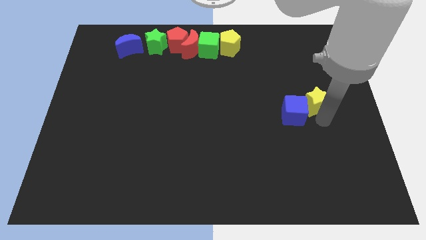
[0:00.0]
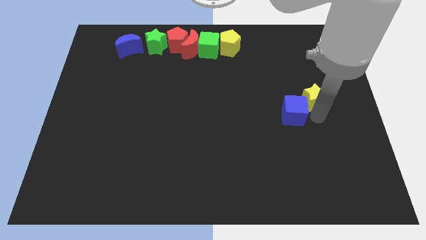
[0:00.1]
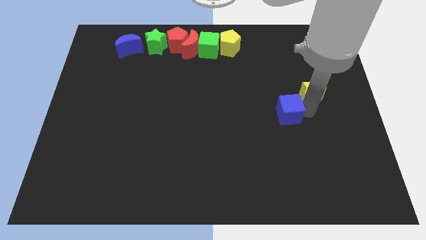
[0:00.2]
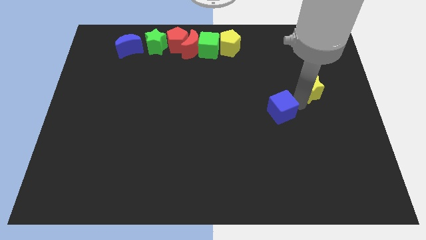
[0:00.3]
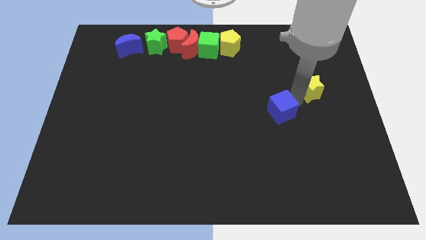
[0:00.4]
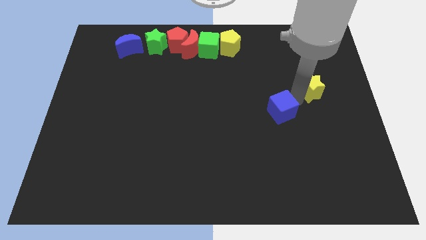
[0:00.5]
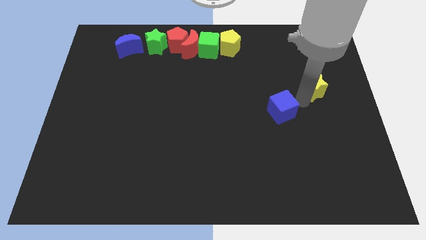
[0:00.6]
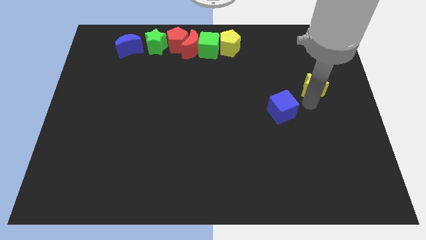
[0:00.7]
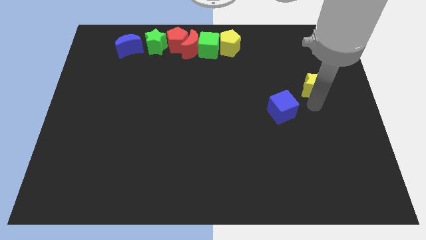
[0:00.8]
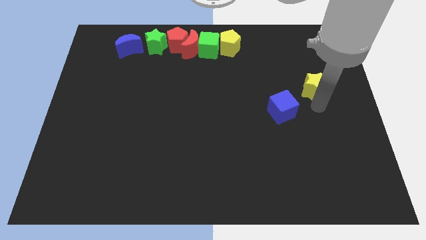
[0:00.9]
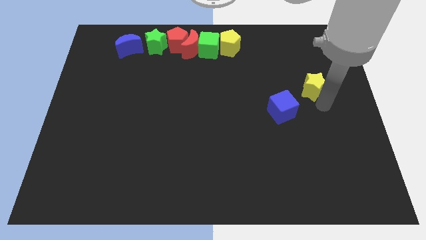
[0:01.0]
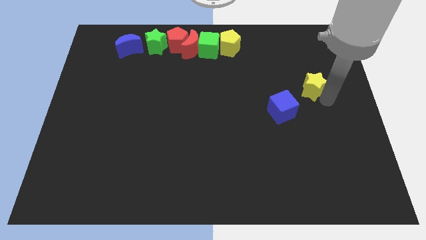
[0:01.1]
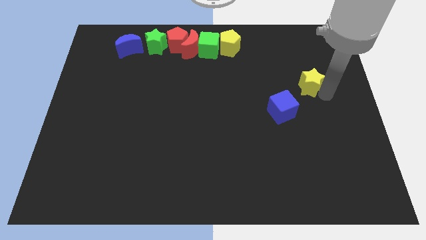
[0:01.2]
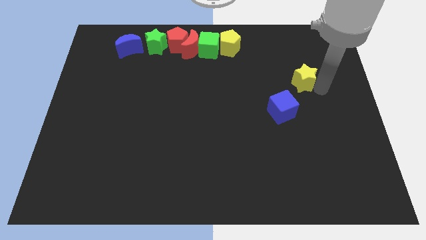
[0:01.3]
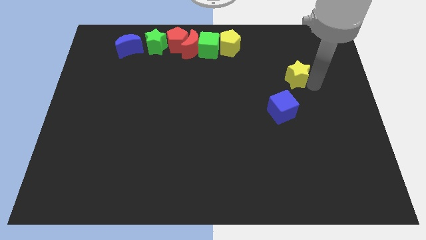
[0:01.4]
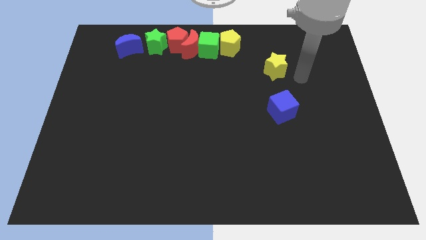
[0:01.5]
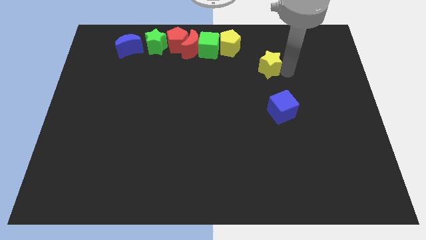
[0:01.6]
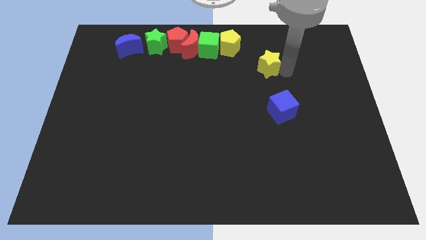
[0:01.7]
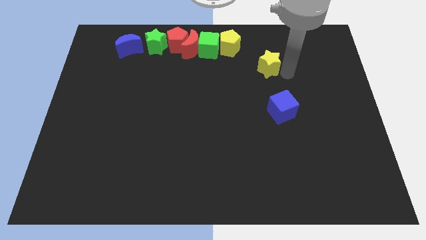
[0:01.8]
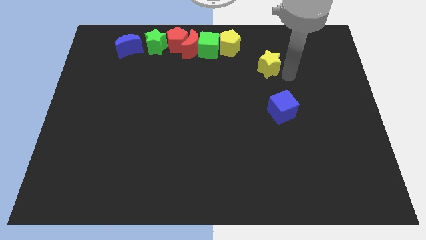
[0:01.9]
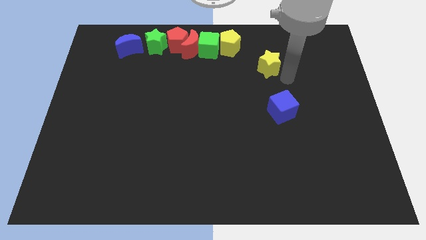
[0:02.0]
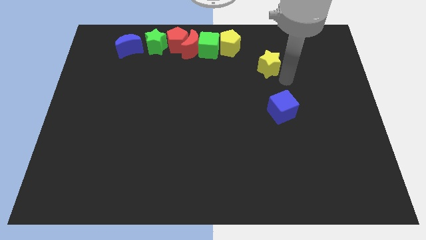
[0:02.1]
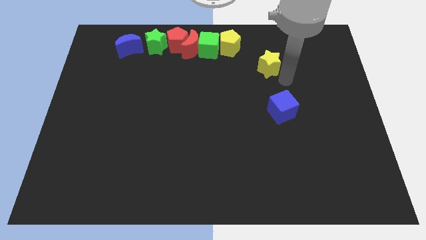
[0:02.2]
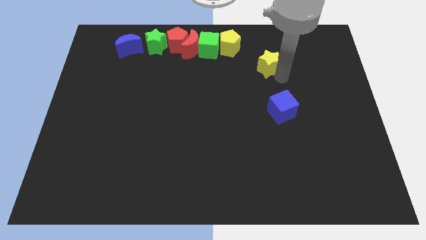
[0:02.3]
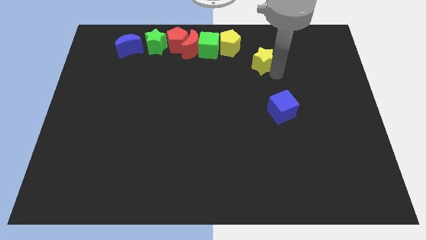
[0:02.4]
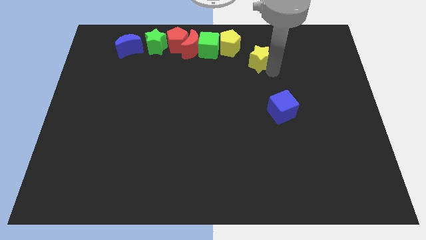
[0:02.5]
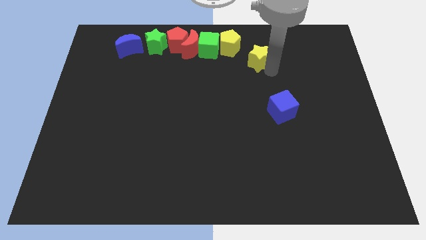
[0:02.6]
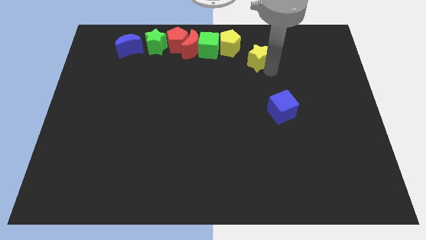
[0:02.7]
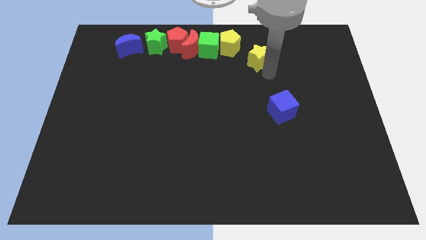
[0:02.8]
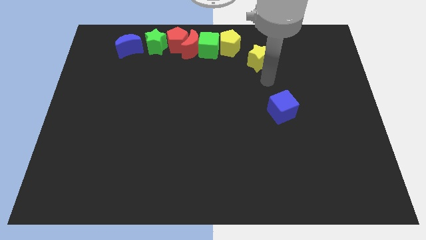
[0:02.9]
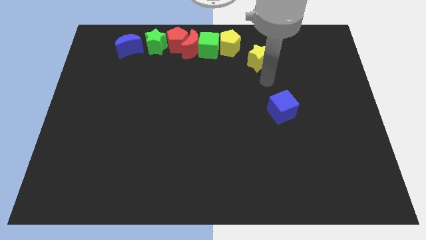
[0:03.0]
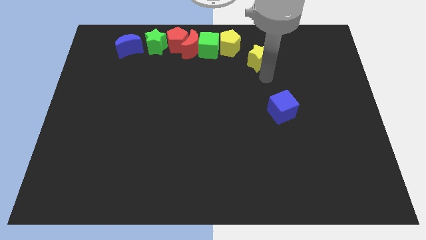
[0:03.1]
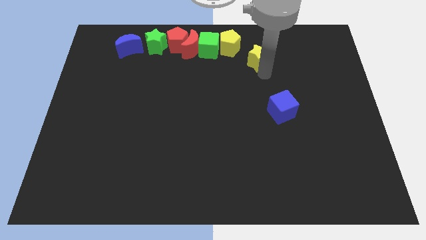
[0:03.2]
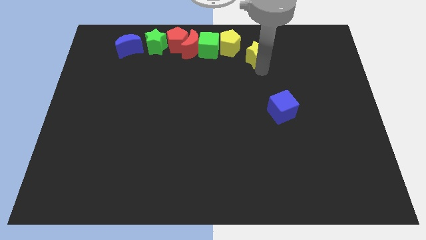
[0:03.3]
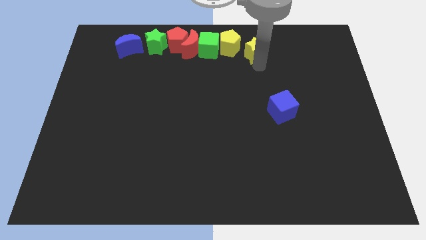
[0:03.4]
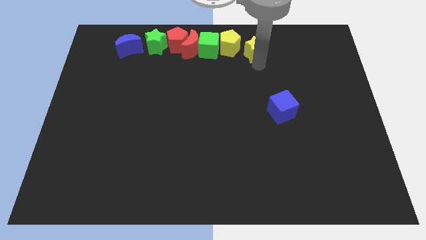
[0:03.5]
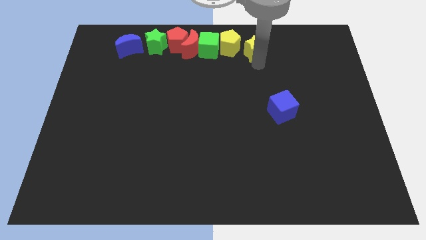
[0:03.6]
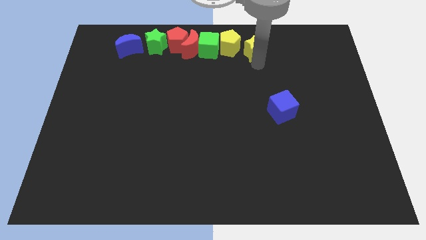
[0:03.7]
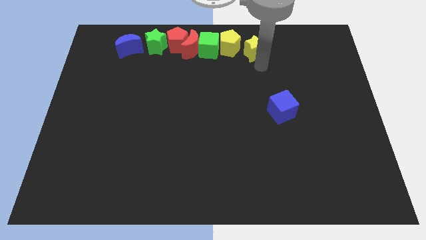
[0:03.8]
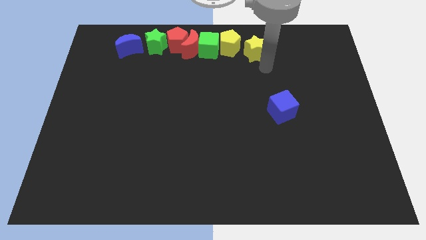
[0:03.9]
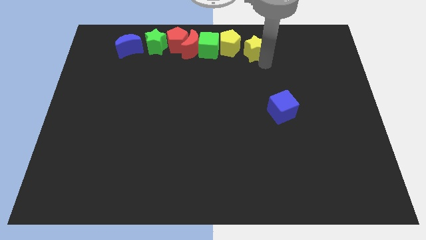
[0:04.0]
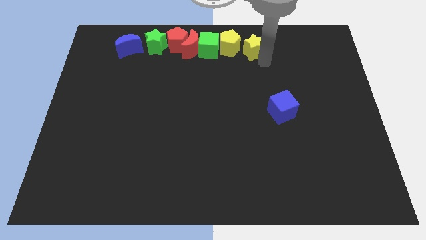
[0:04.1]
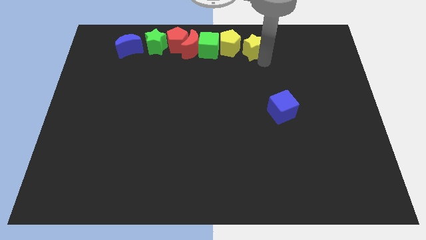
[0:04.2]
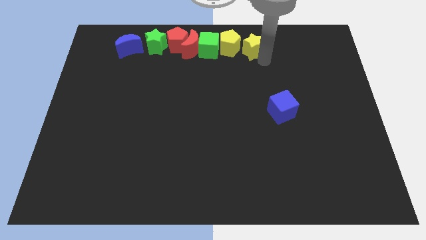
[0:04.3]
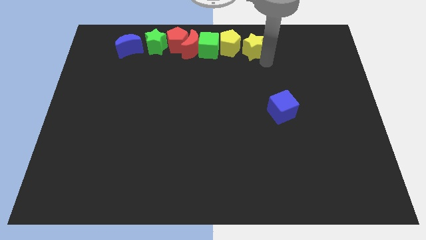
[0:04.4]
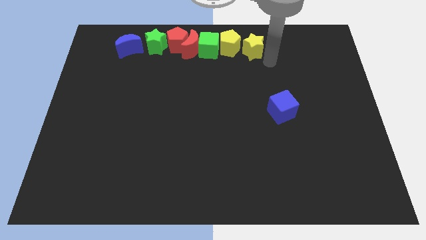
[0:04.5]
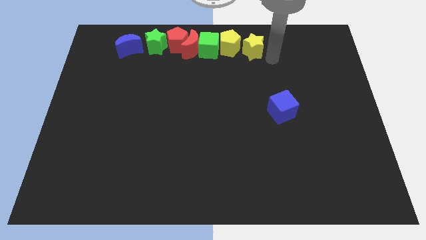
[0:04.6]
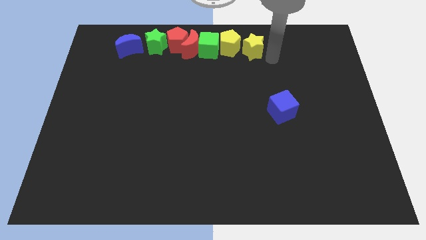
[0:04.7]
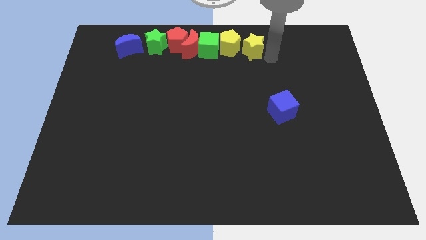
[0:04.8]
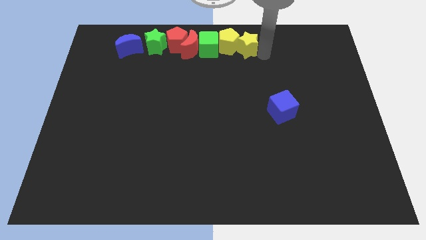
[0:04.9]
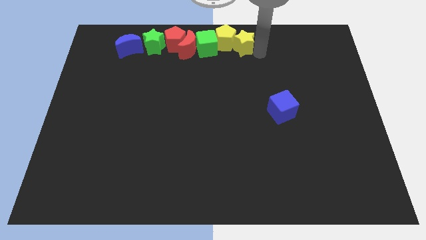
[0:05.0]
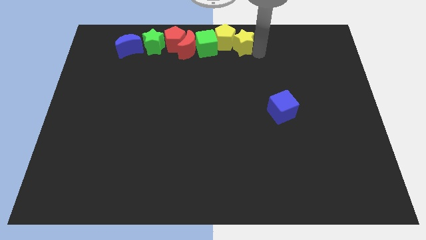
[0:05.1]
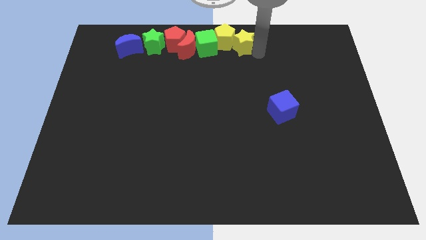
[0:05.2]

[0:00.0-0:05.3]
push the yellow star into the right side of the yellow pentagon

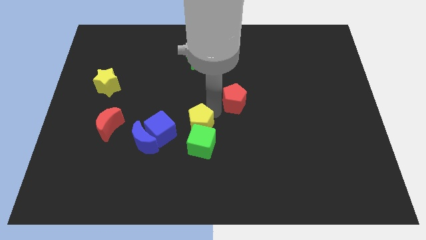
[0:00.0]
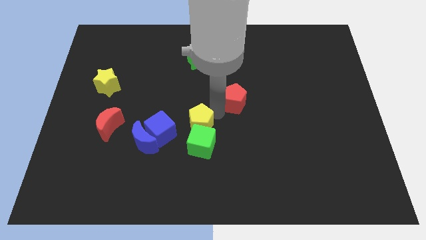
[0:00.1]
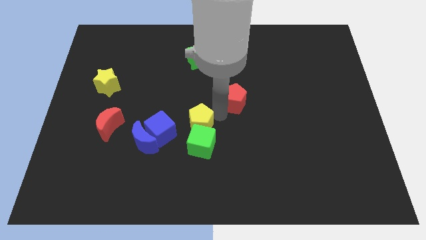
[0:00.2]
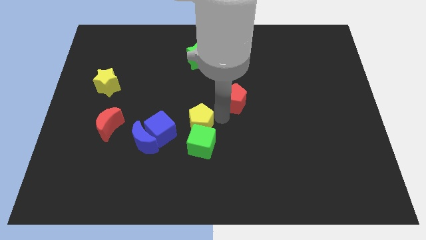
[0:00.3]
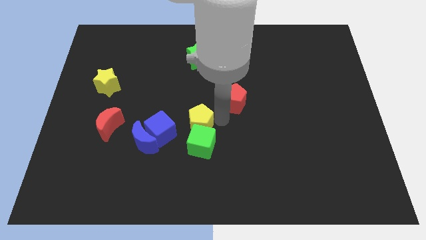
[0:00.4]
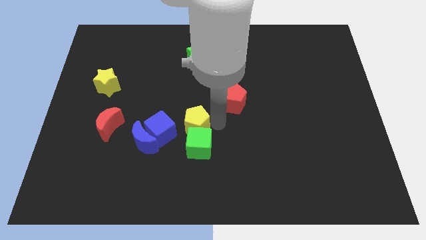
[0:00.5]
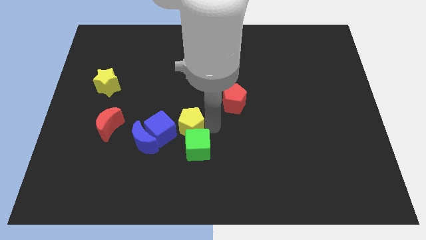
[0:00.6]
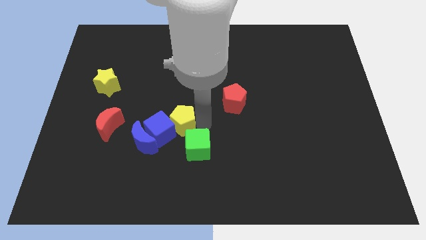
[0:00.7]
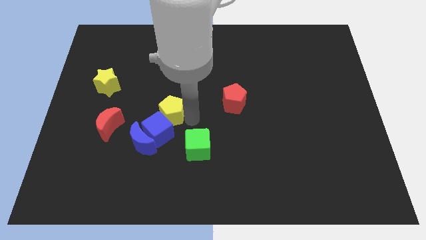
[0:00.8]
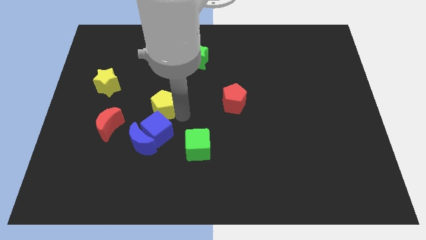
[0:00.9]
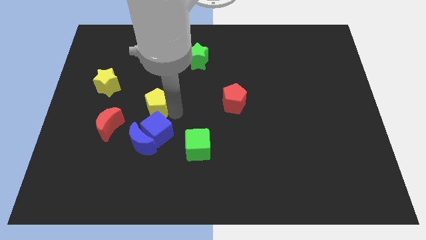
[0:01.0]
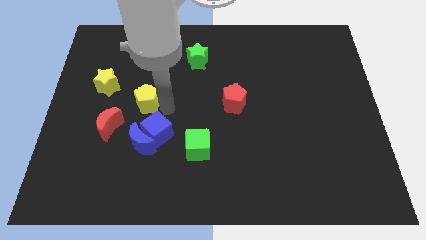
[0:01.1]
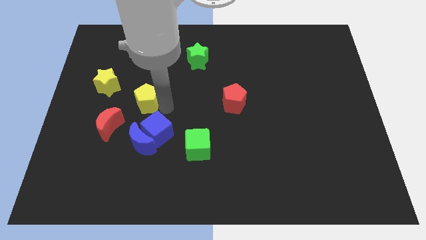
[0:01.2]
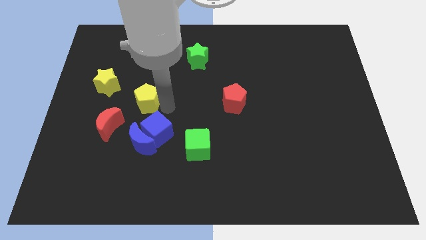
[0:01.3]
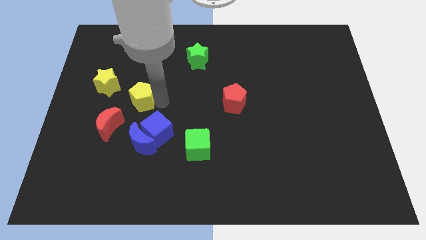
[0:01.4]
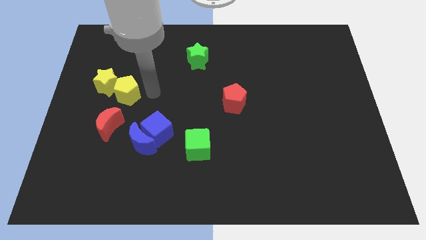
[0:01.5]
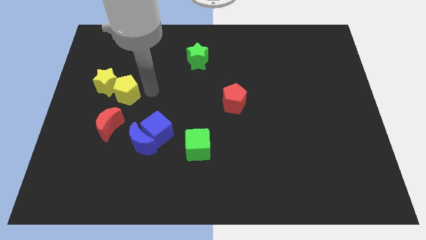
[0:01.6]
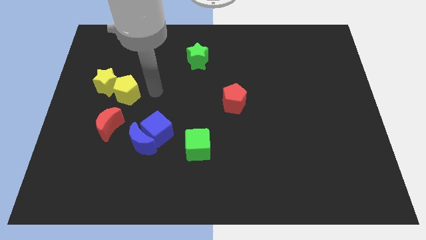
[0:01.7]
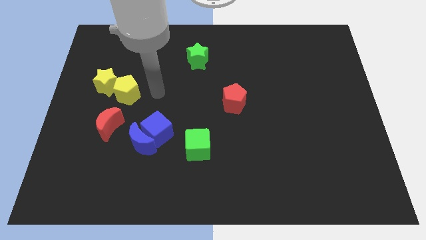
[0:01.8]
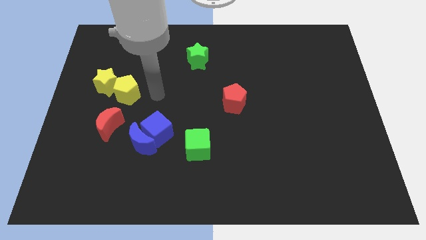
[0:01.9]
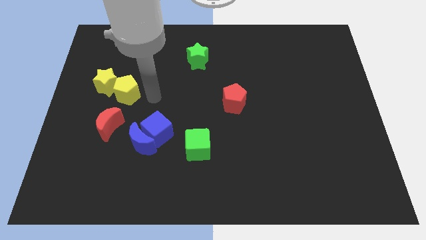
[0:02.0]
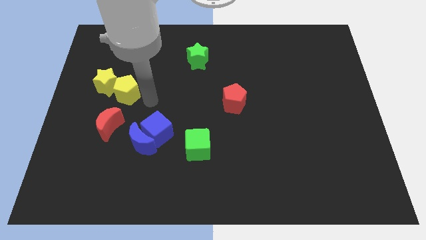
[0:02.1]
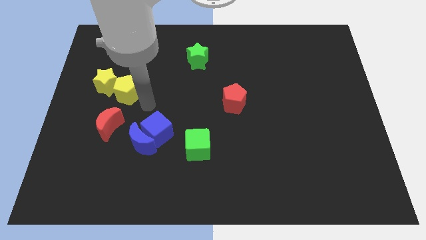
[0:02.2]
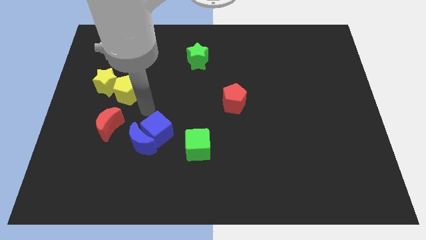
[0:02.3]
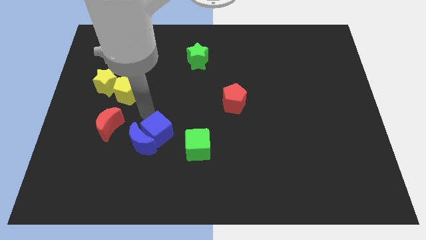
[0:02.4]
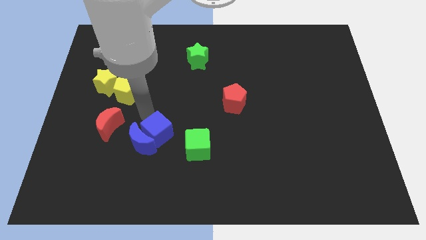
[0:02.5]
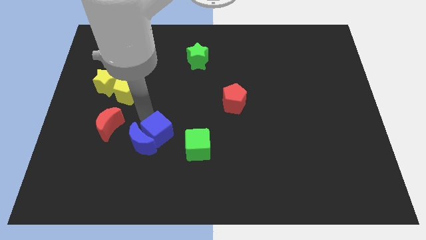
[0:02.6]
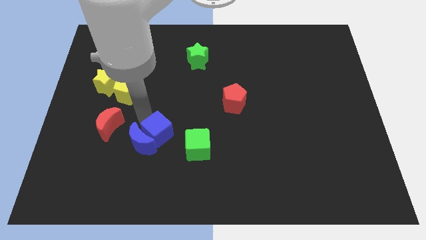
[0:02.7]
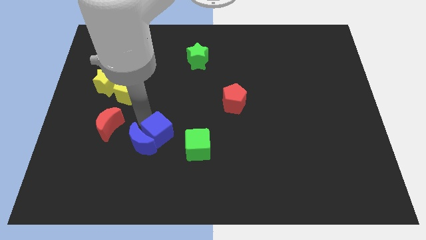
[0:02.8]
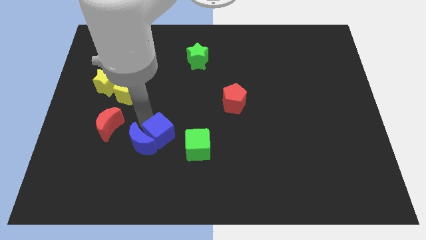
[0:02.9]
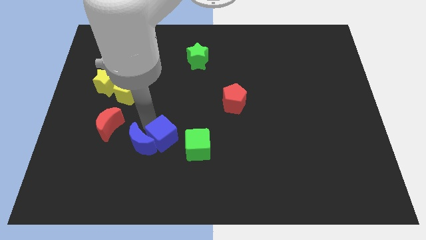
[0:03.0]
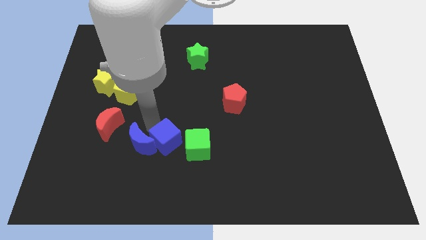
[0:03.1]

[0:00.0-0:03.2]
place the yellow blocks together to the center left side of the board

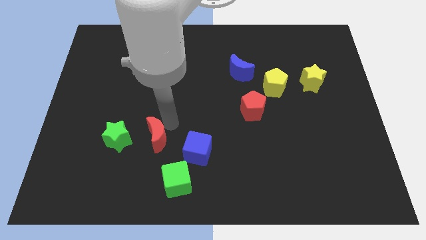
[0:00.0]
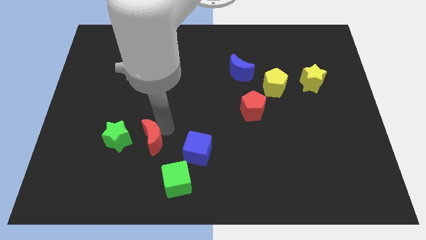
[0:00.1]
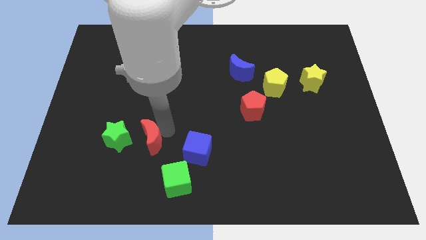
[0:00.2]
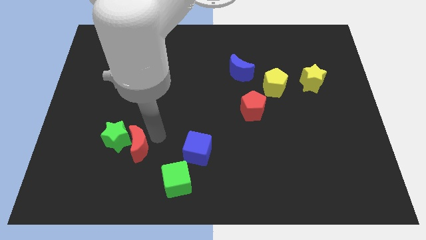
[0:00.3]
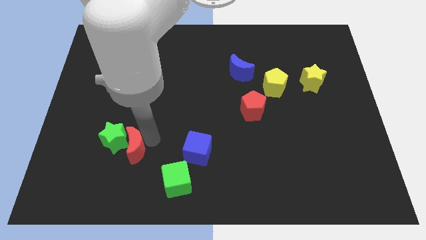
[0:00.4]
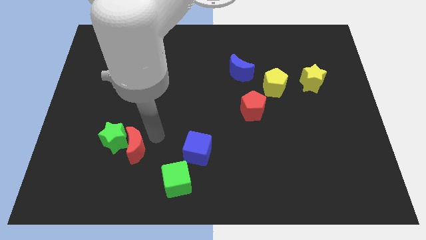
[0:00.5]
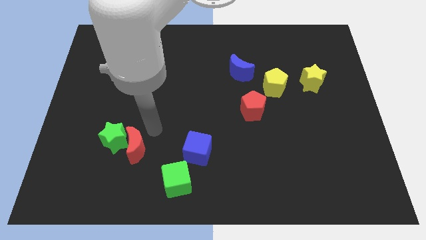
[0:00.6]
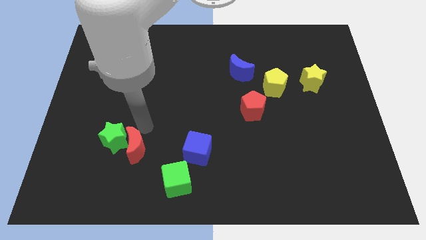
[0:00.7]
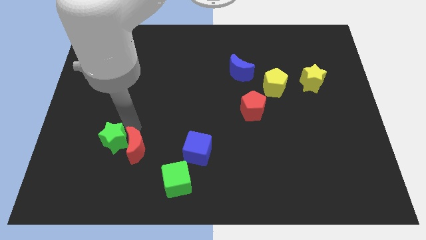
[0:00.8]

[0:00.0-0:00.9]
push the red moon into the green star
